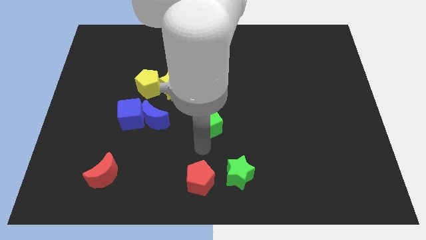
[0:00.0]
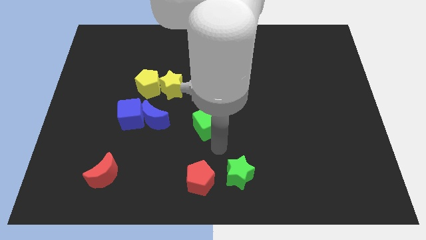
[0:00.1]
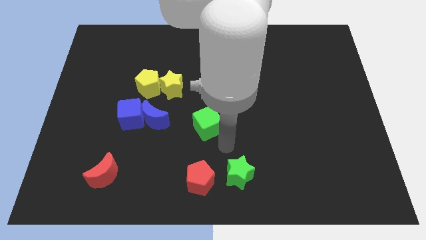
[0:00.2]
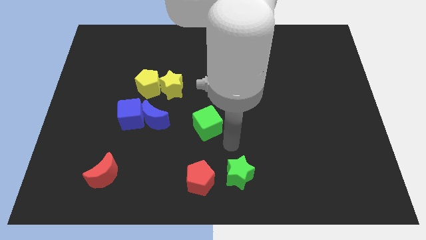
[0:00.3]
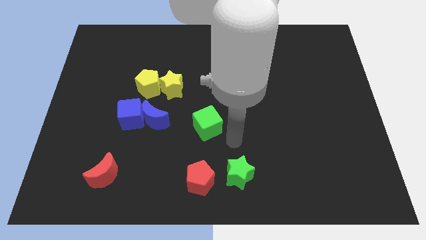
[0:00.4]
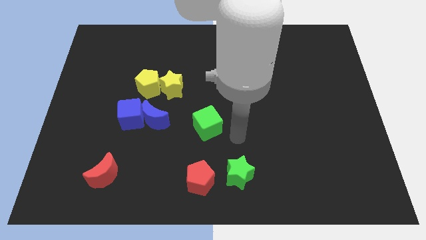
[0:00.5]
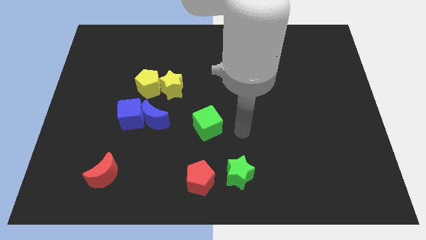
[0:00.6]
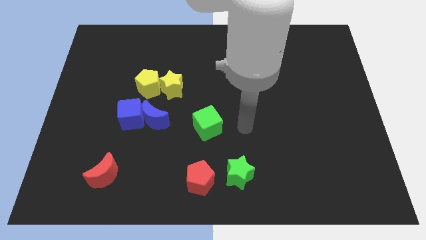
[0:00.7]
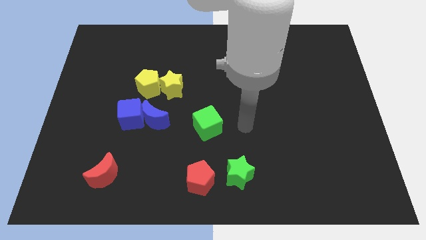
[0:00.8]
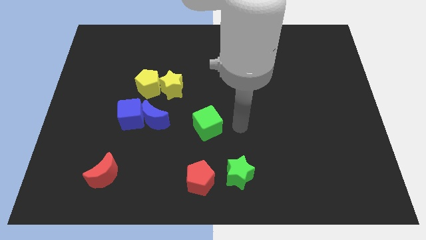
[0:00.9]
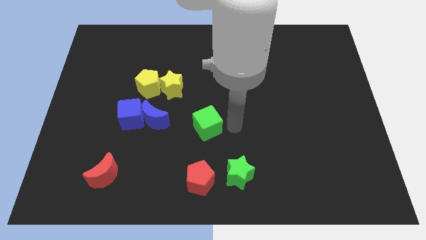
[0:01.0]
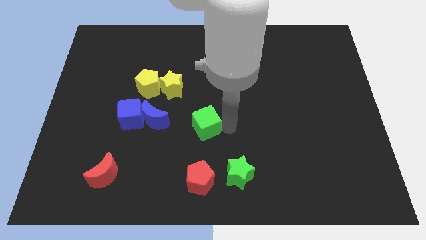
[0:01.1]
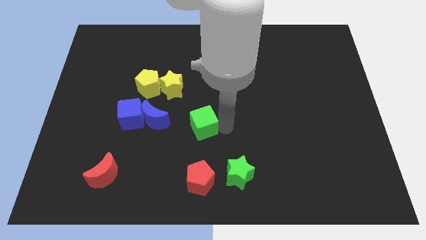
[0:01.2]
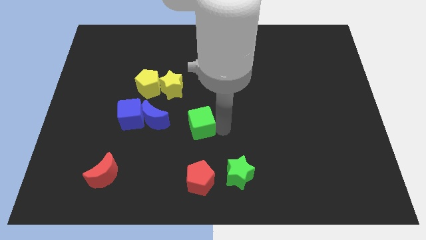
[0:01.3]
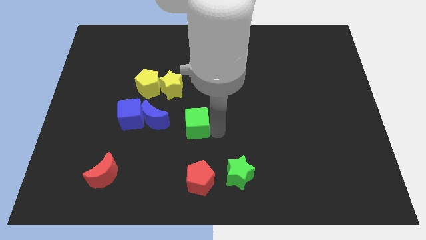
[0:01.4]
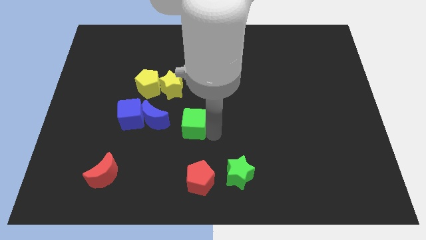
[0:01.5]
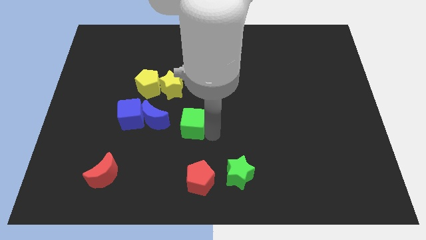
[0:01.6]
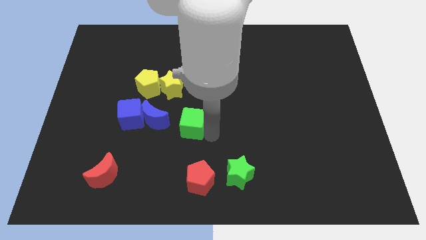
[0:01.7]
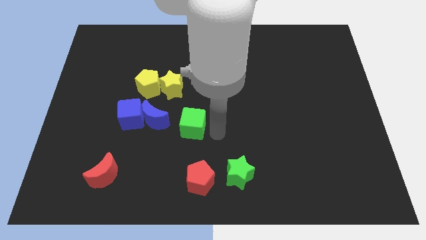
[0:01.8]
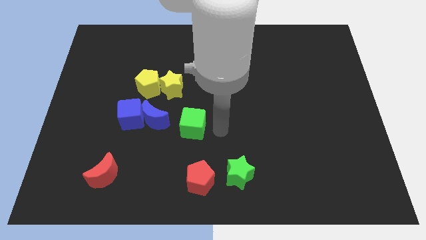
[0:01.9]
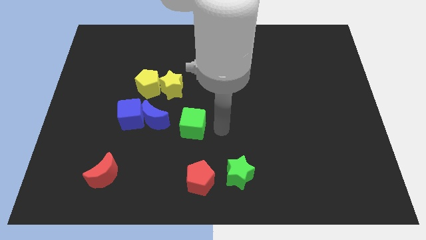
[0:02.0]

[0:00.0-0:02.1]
push the green cube slightly towards the blue crescent

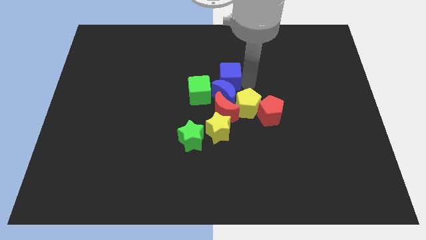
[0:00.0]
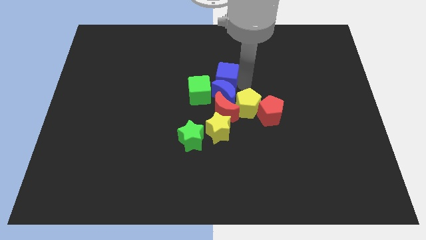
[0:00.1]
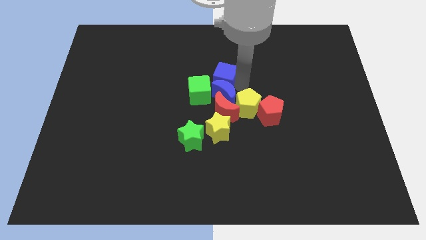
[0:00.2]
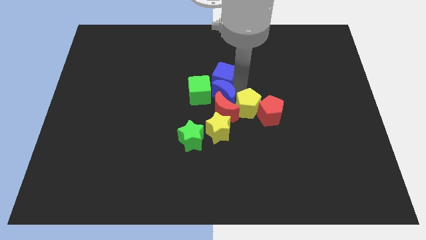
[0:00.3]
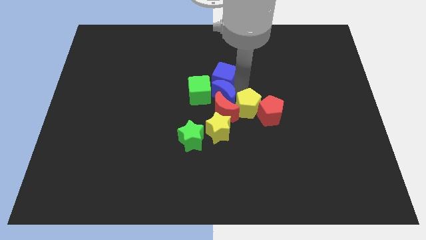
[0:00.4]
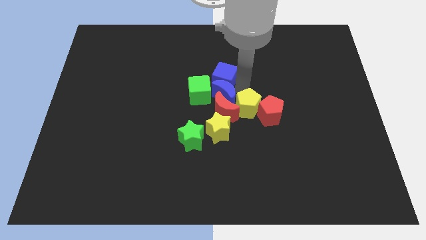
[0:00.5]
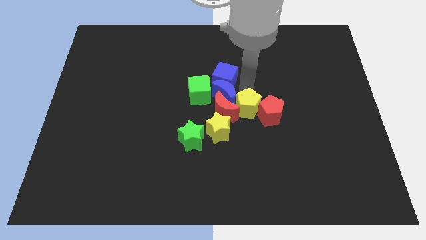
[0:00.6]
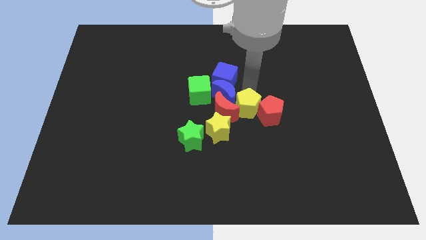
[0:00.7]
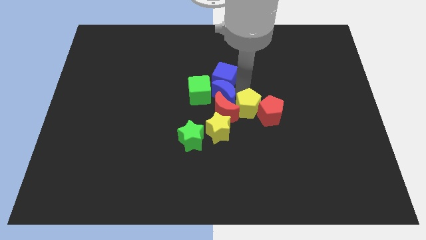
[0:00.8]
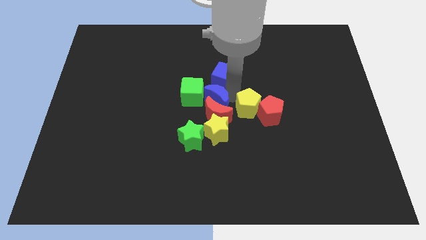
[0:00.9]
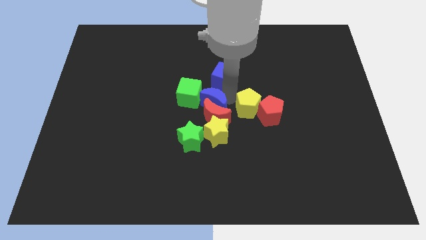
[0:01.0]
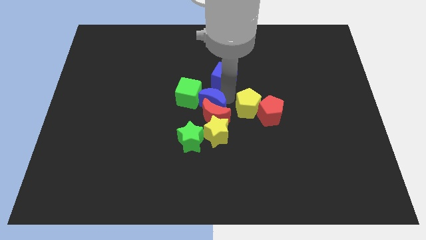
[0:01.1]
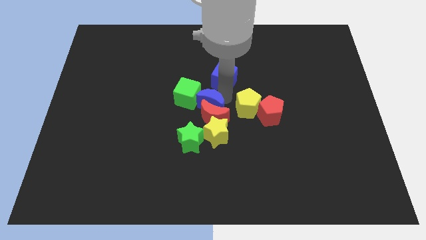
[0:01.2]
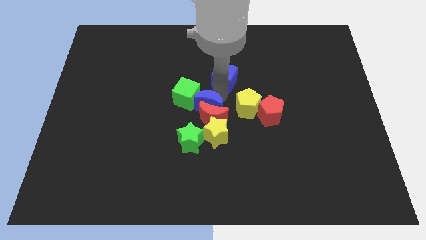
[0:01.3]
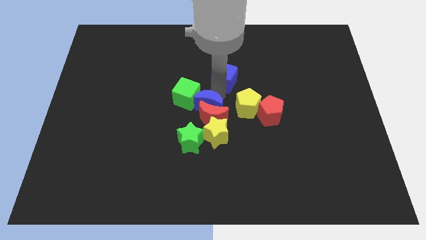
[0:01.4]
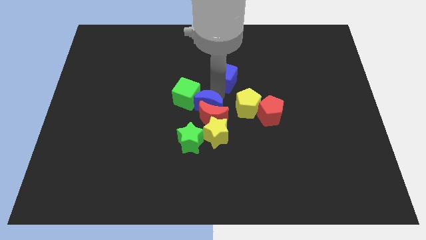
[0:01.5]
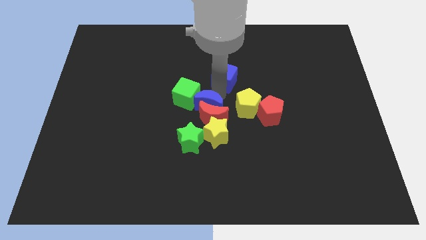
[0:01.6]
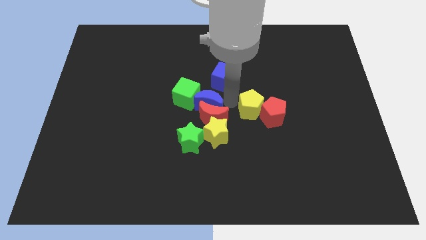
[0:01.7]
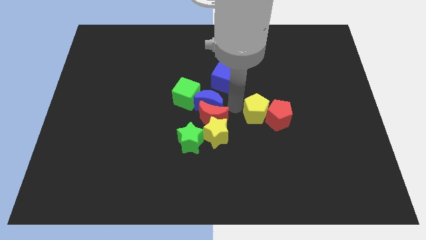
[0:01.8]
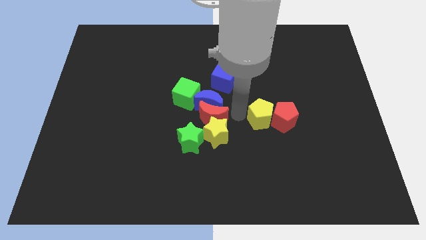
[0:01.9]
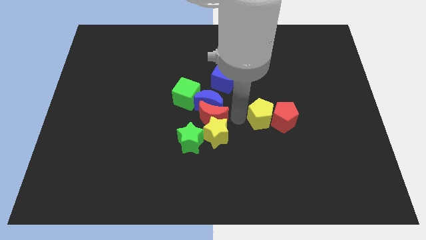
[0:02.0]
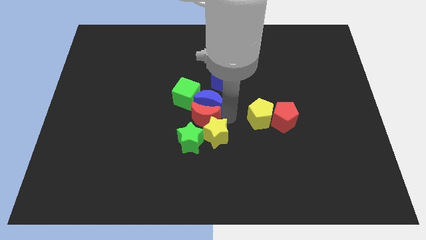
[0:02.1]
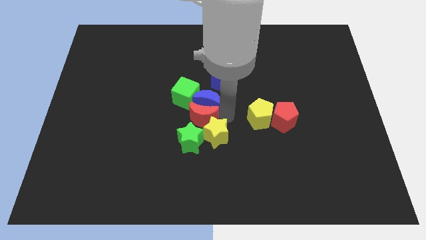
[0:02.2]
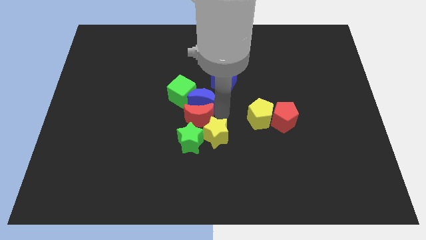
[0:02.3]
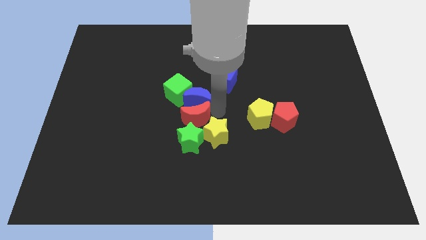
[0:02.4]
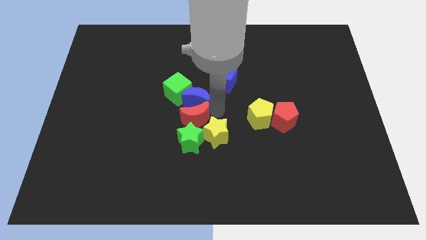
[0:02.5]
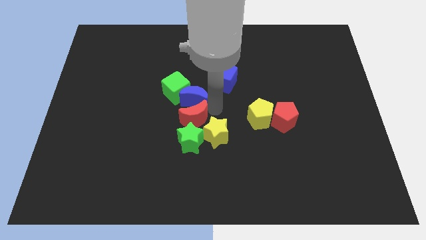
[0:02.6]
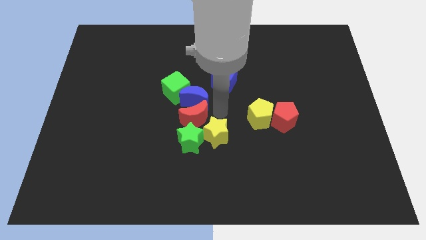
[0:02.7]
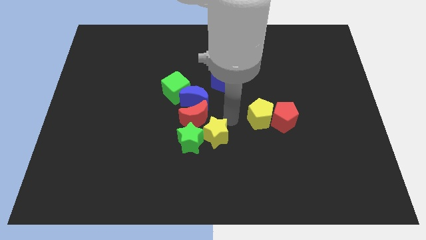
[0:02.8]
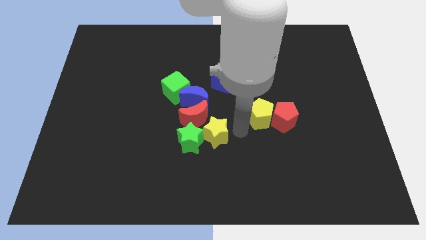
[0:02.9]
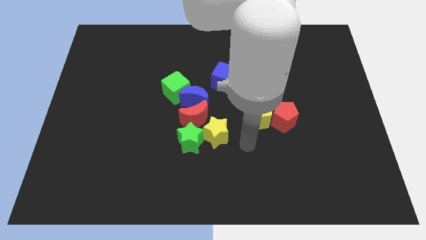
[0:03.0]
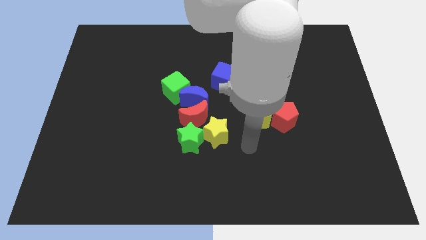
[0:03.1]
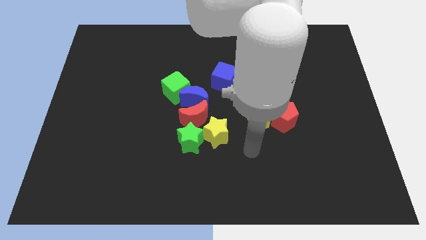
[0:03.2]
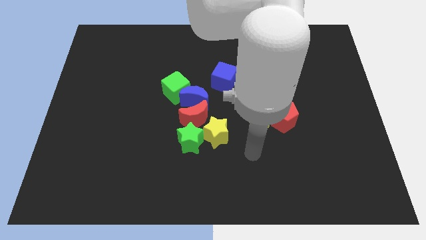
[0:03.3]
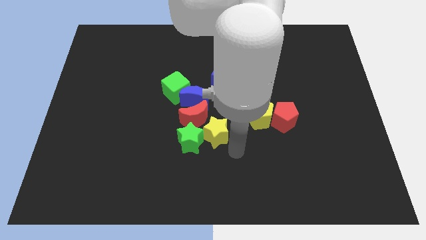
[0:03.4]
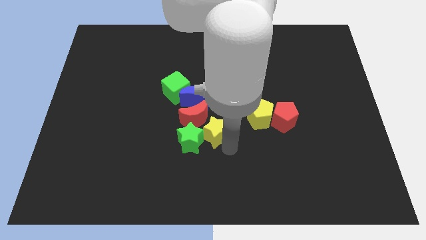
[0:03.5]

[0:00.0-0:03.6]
move blue moon and red moon into green cube

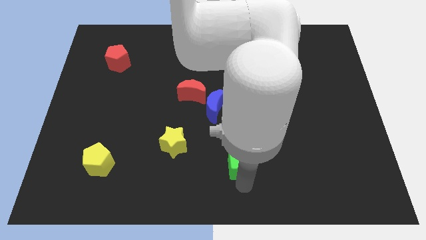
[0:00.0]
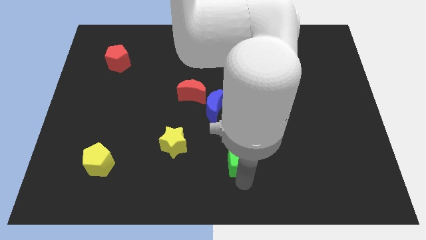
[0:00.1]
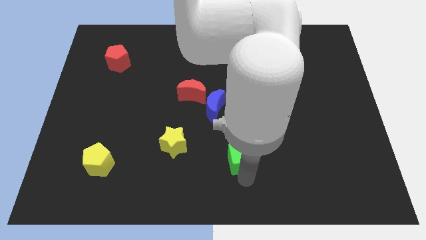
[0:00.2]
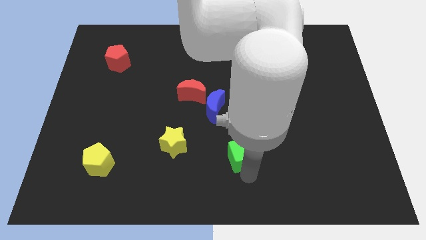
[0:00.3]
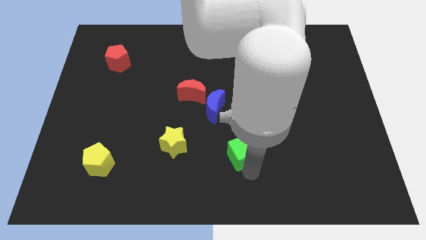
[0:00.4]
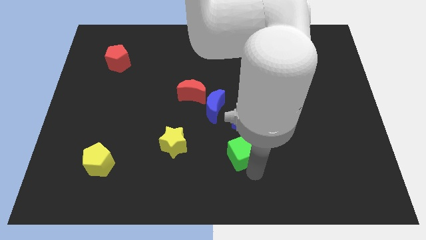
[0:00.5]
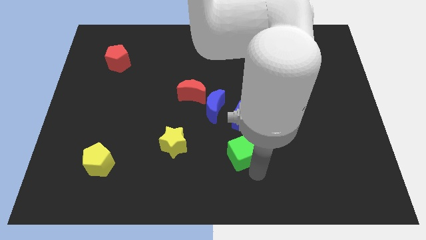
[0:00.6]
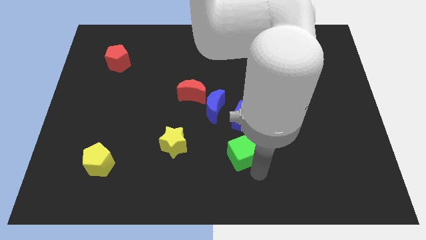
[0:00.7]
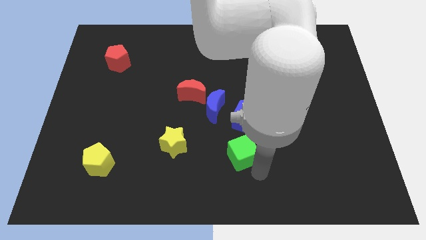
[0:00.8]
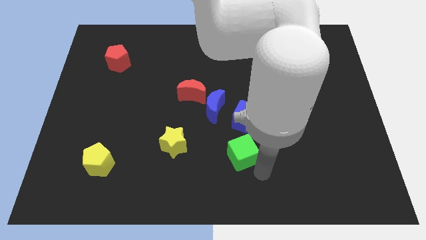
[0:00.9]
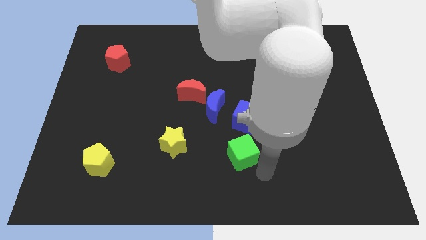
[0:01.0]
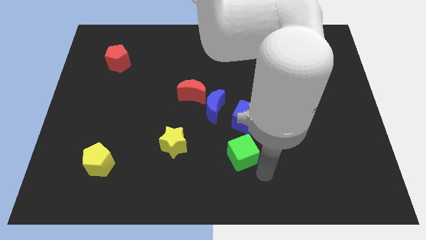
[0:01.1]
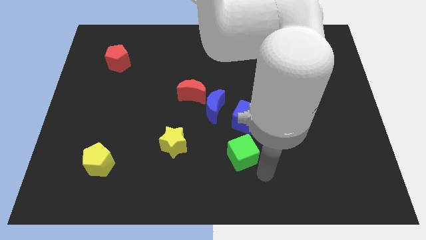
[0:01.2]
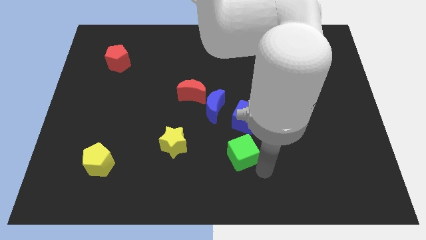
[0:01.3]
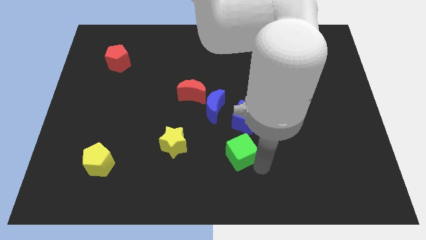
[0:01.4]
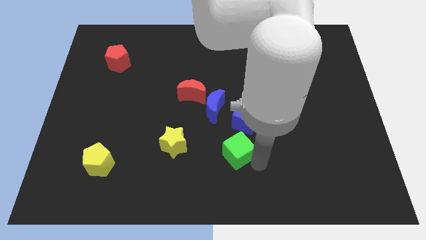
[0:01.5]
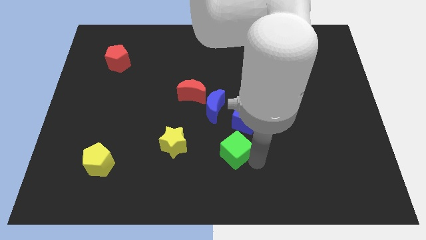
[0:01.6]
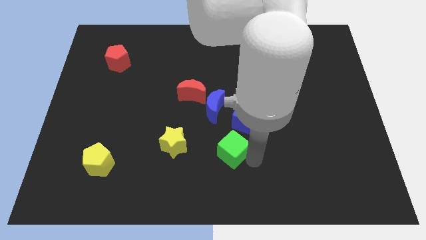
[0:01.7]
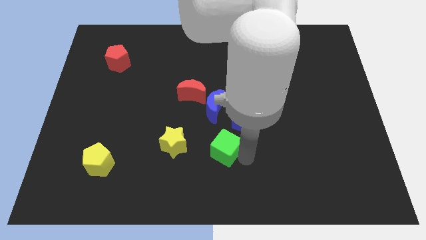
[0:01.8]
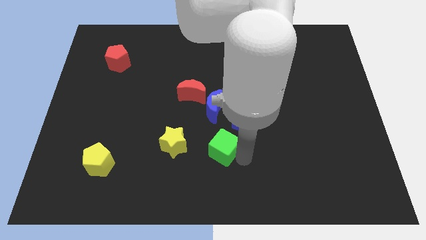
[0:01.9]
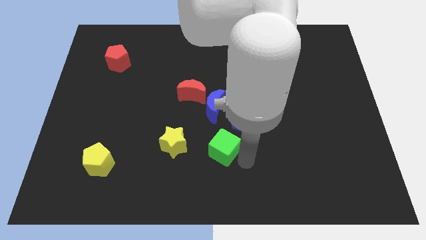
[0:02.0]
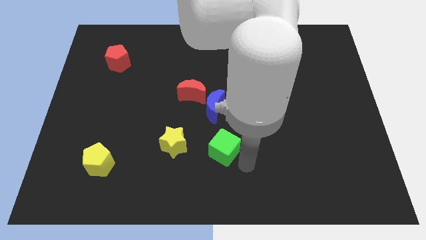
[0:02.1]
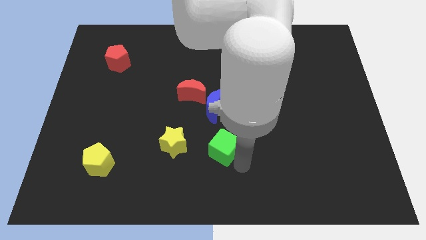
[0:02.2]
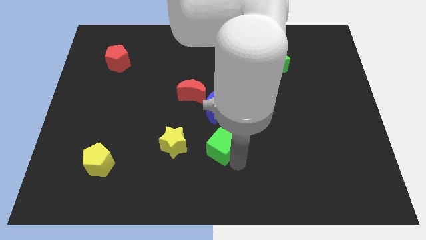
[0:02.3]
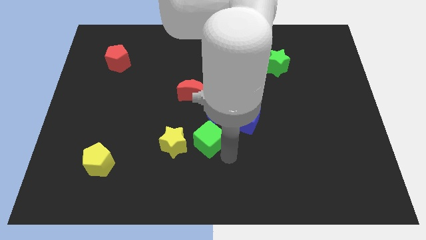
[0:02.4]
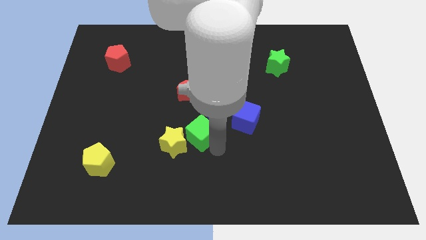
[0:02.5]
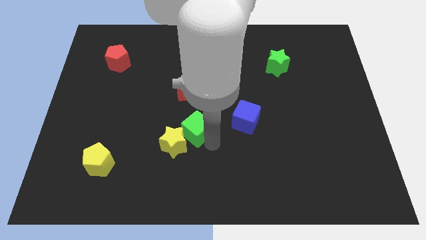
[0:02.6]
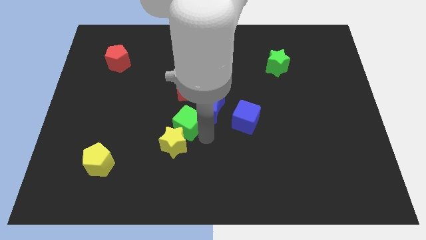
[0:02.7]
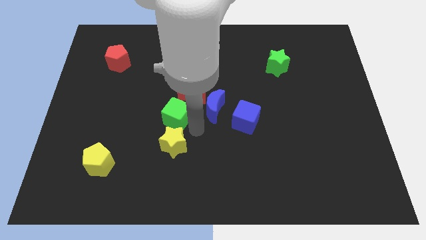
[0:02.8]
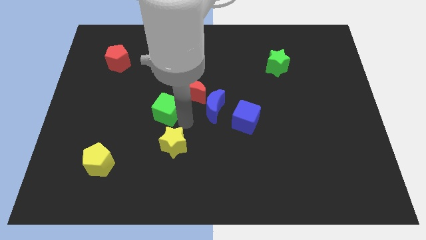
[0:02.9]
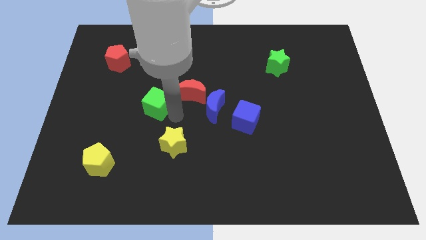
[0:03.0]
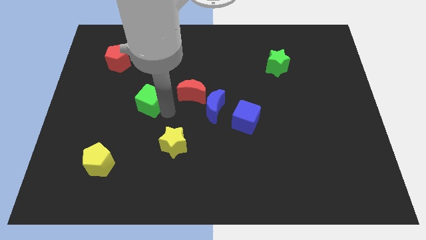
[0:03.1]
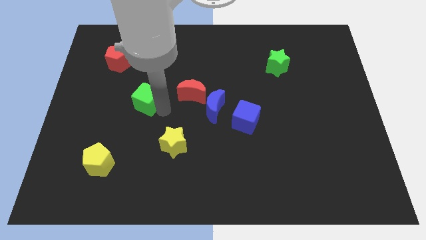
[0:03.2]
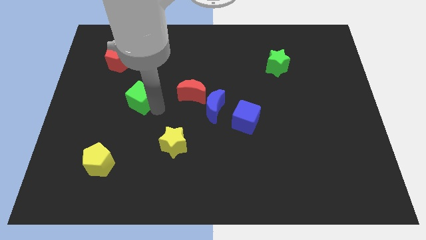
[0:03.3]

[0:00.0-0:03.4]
place the green cube in between the red pentagon and yellow star

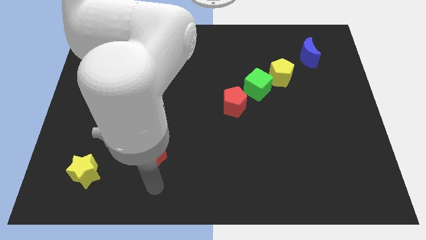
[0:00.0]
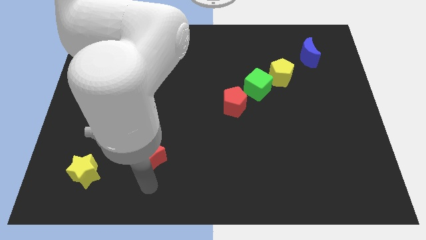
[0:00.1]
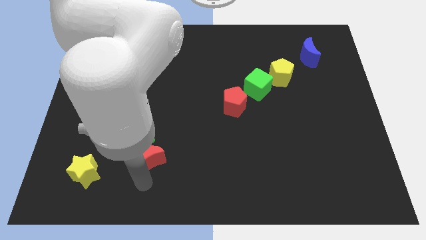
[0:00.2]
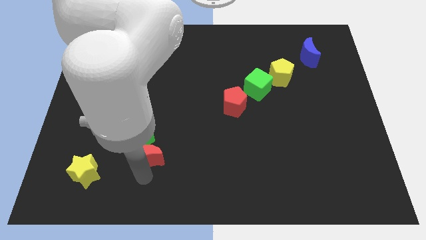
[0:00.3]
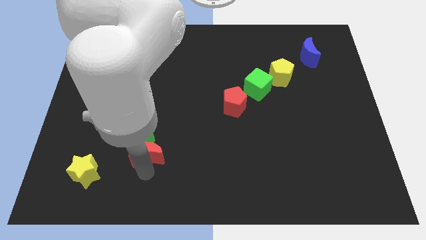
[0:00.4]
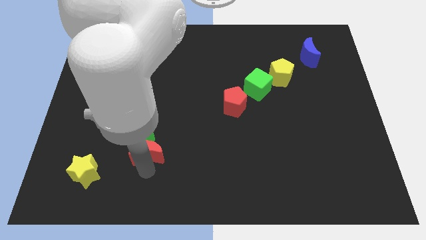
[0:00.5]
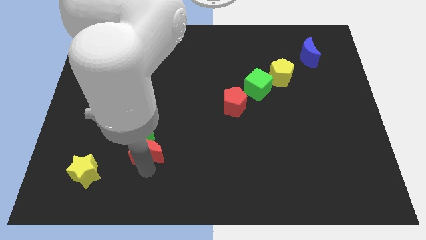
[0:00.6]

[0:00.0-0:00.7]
push the red moon into green star
